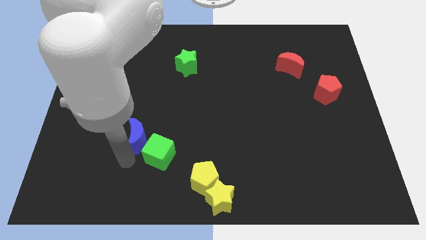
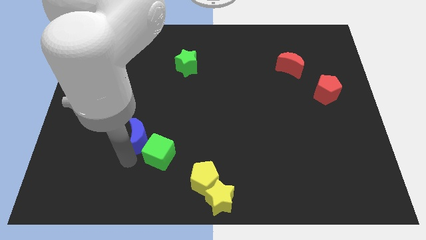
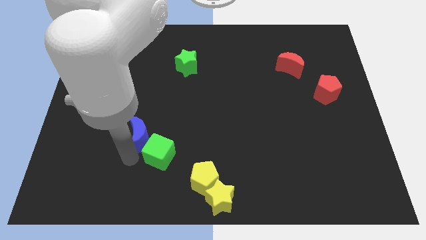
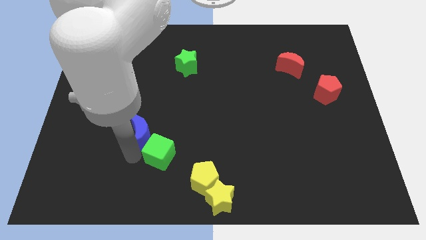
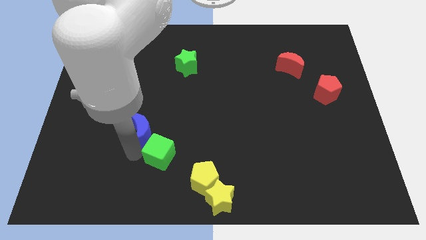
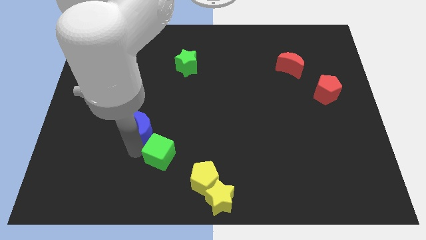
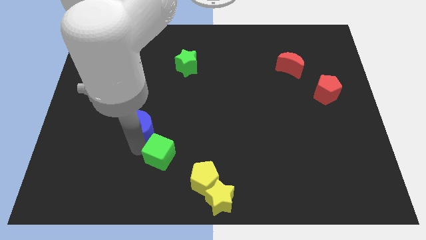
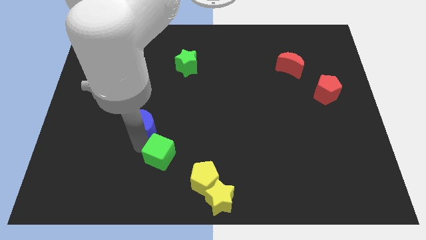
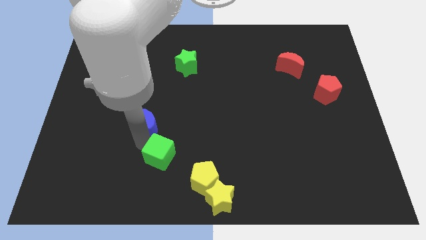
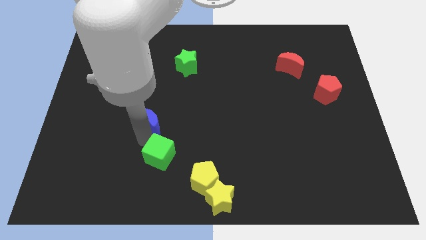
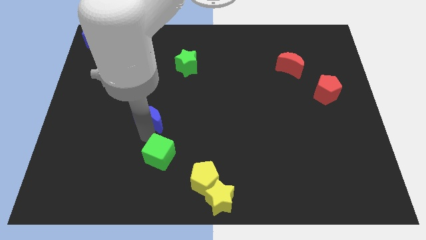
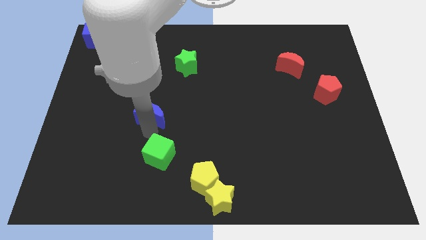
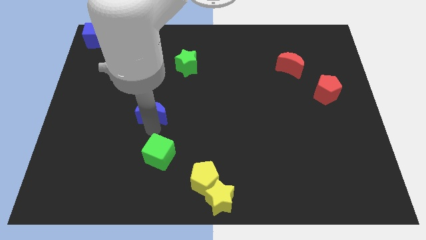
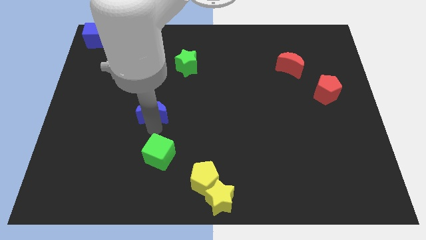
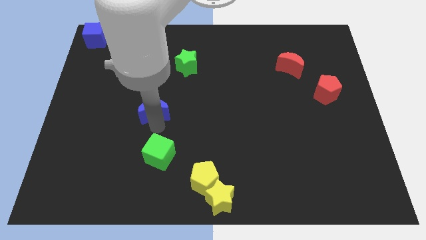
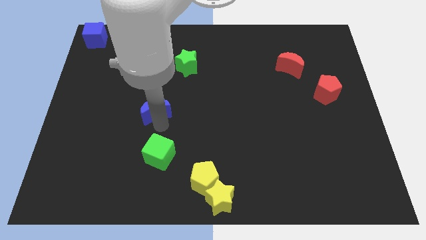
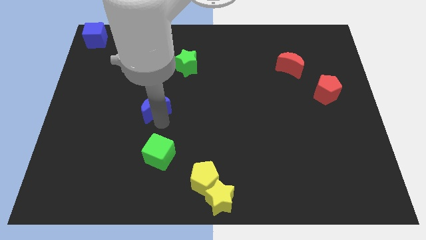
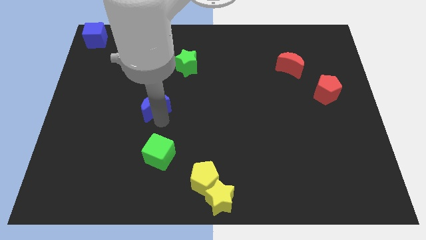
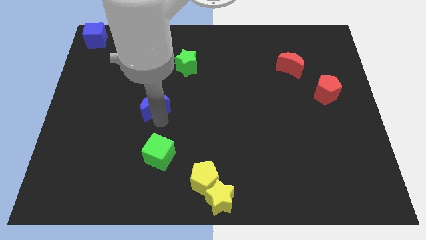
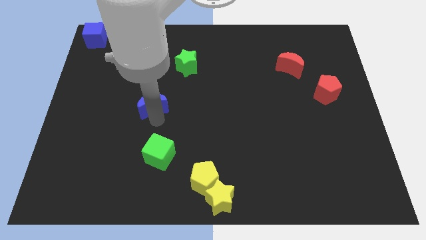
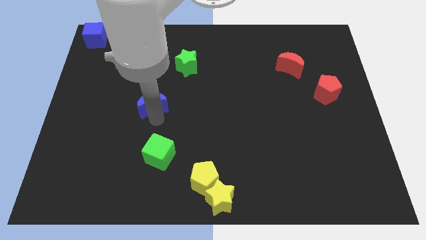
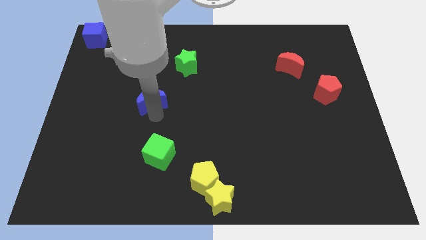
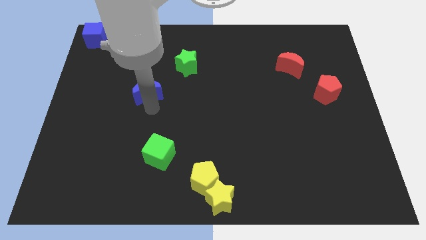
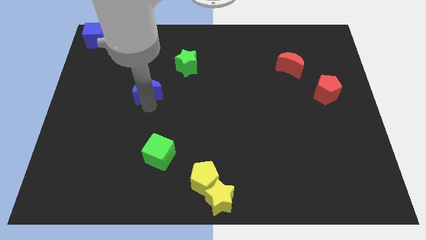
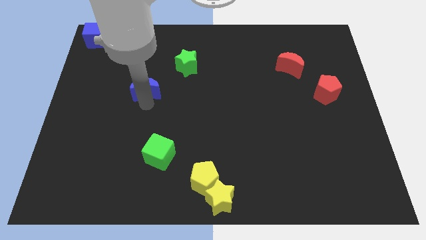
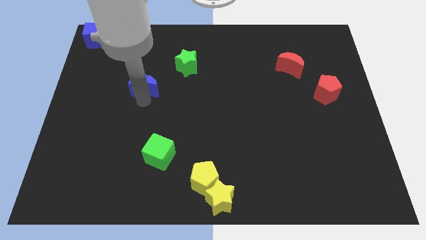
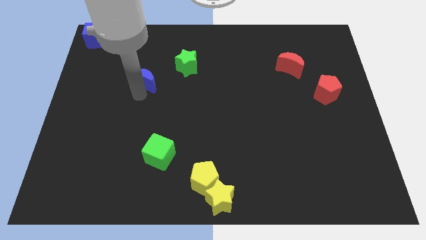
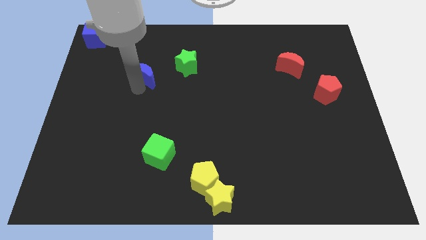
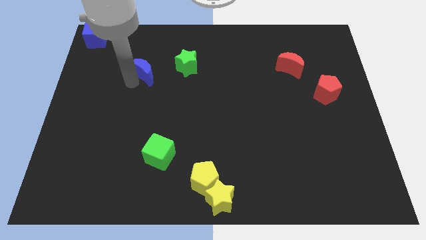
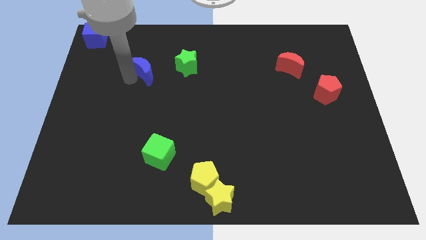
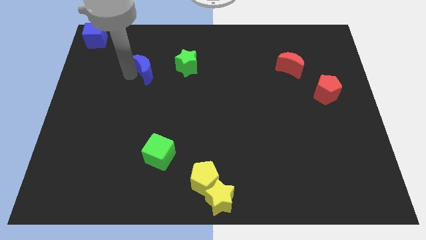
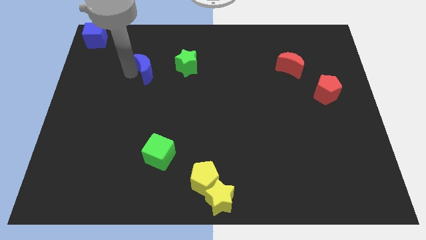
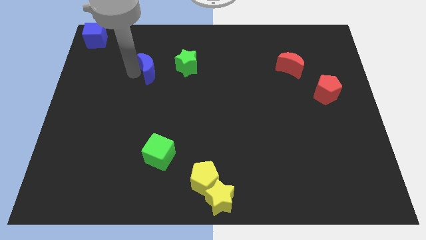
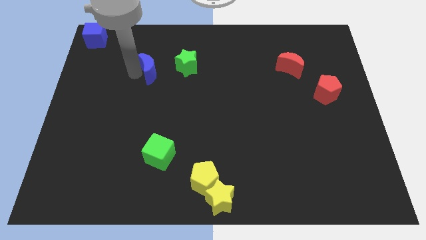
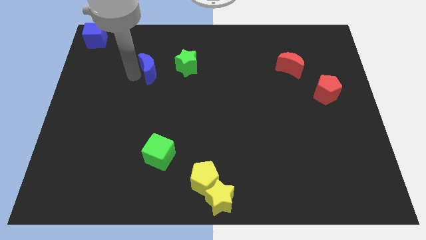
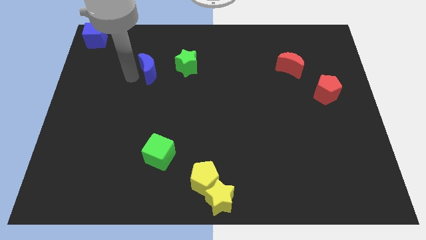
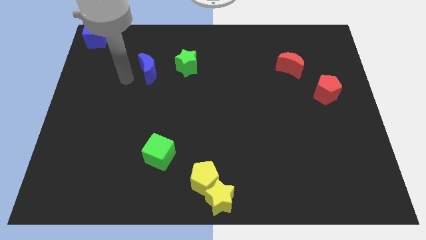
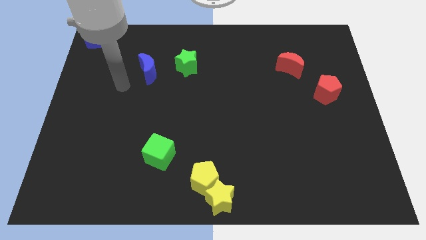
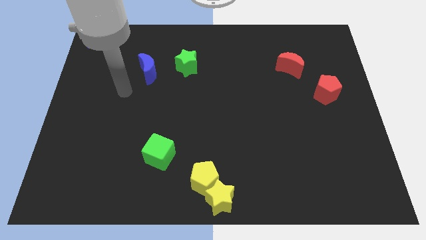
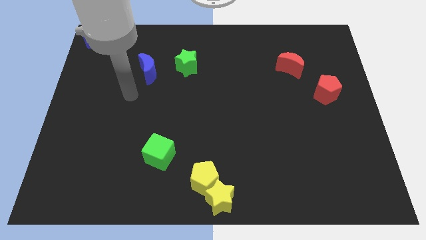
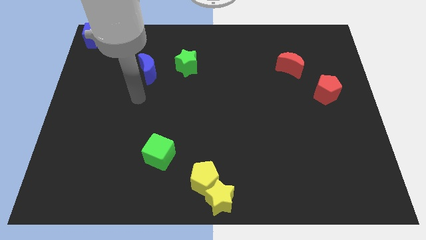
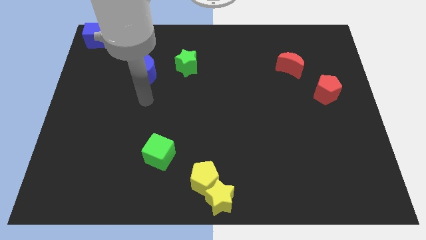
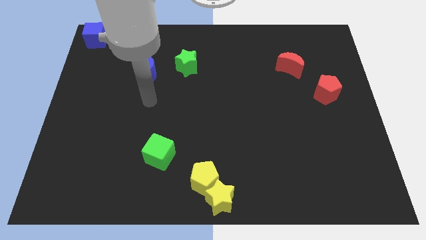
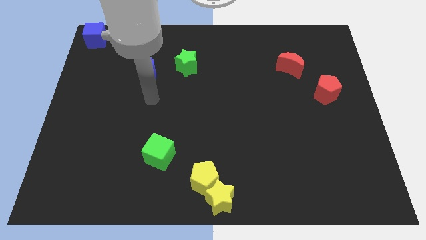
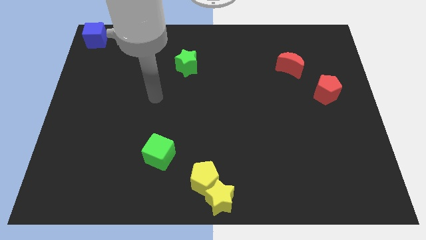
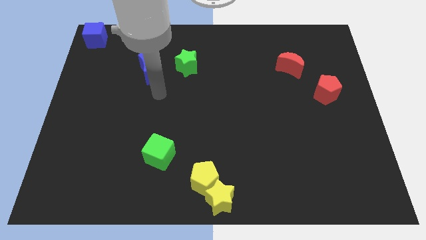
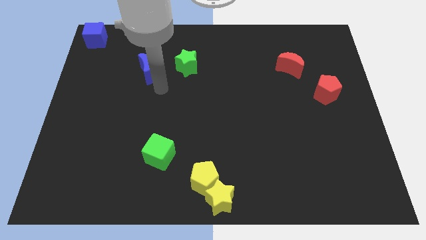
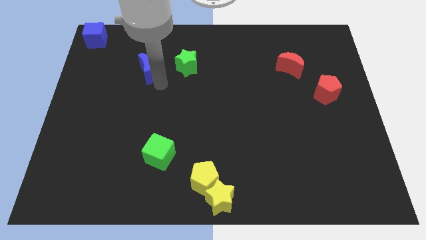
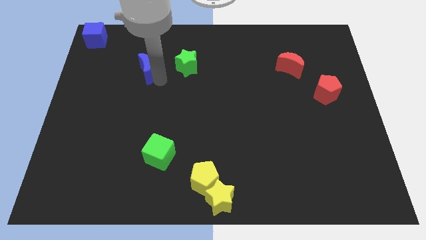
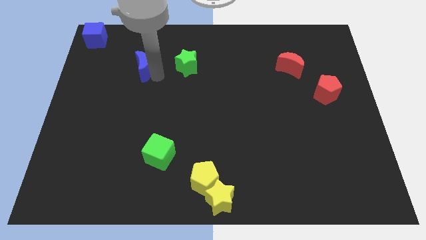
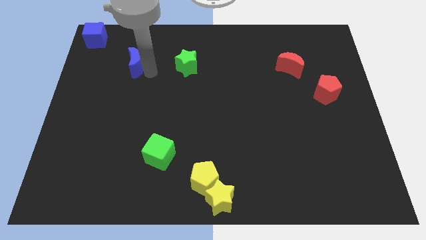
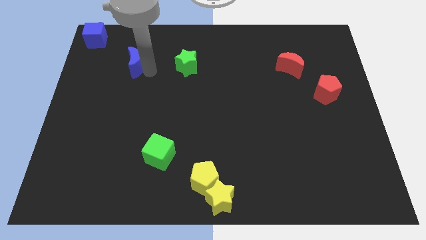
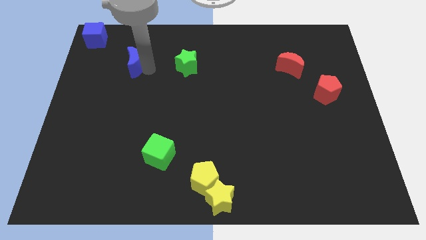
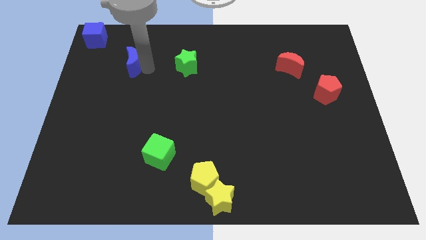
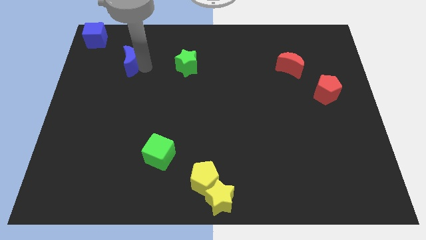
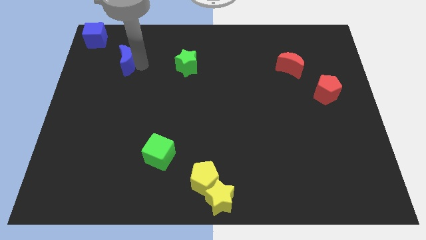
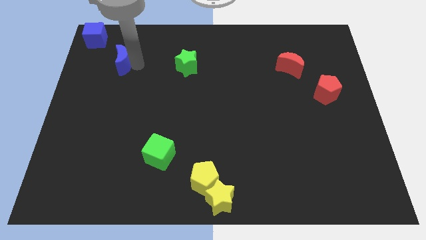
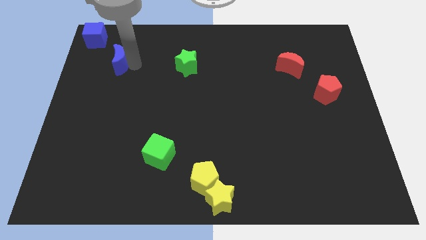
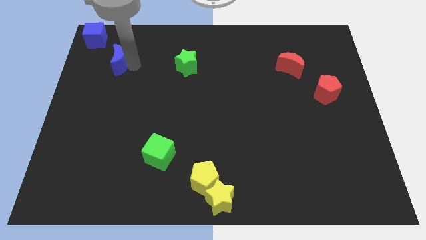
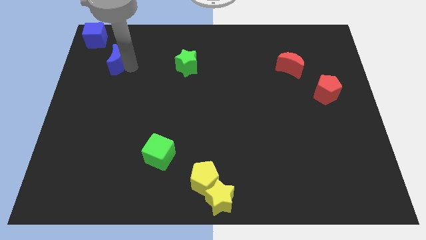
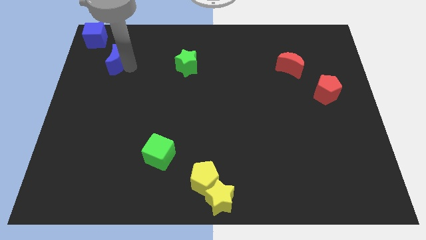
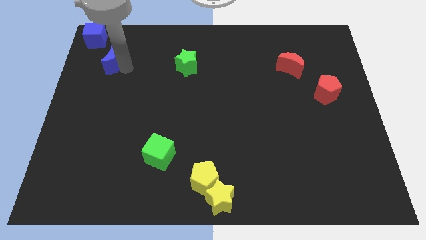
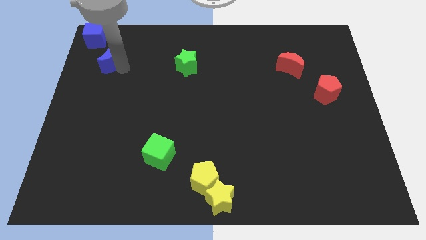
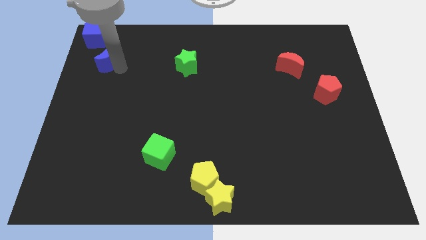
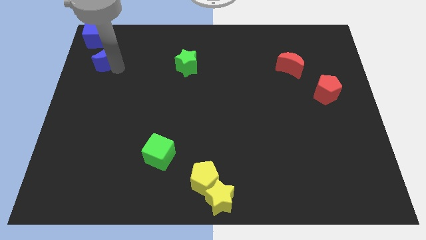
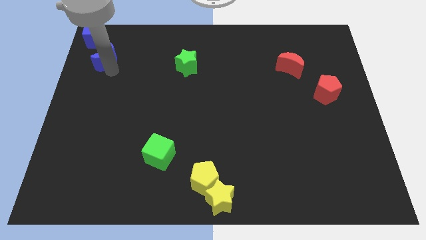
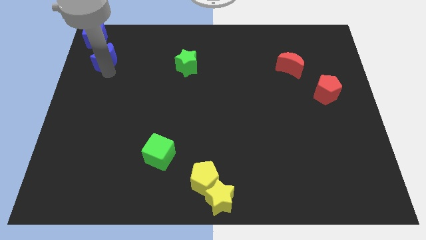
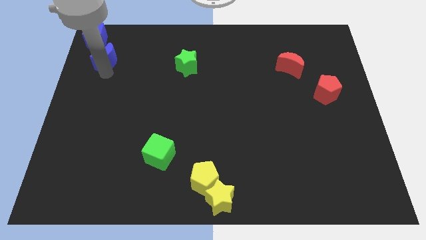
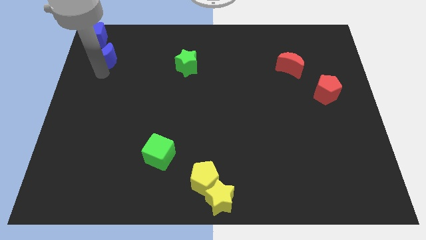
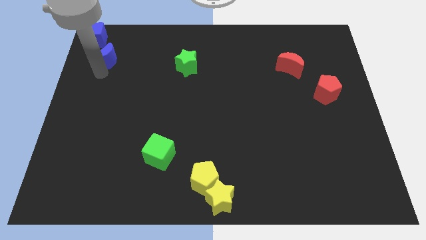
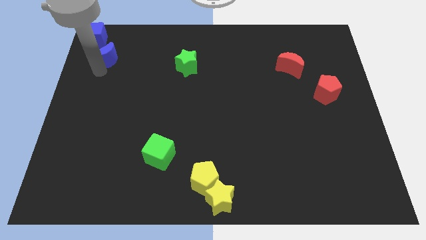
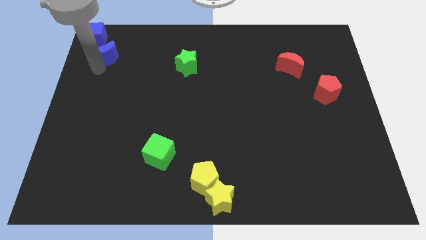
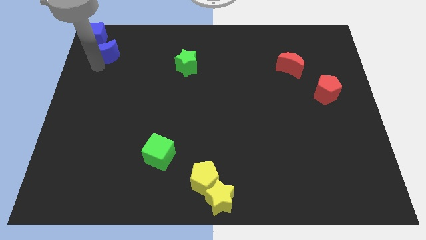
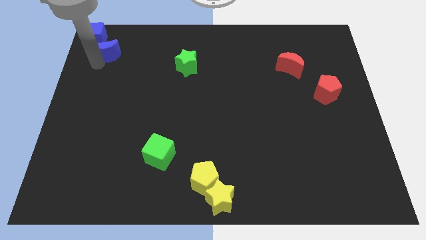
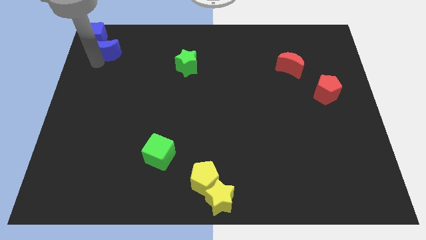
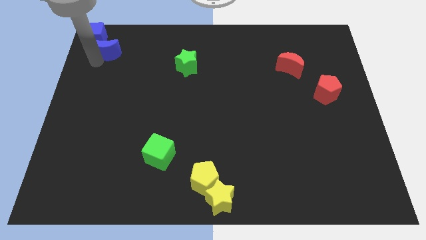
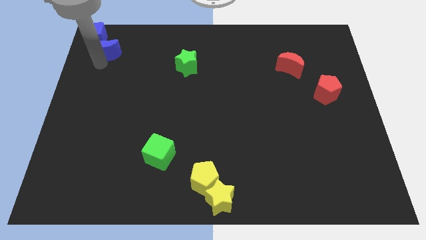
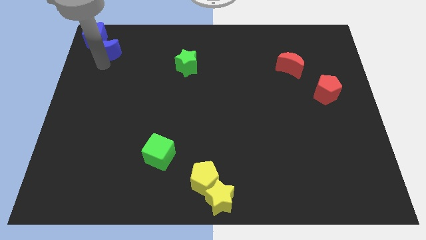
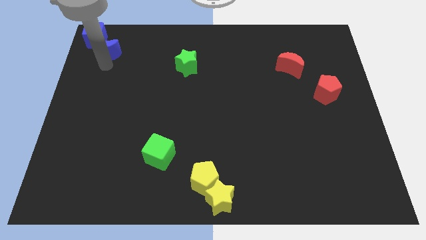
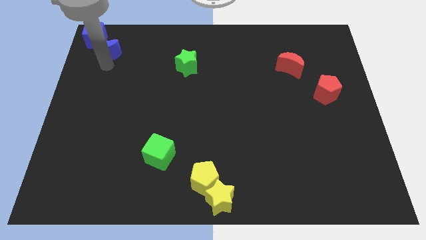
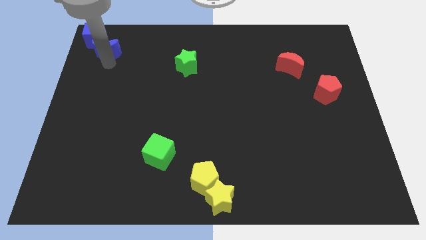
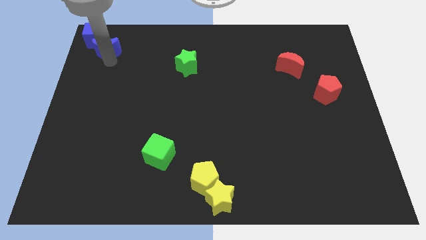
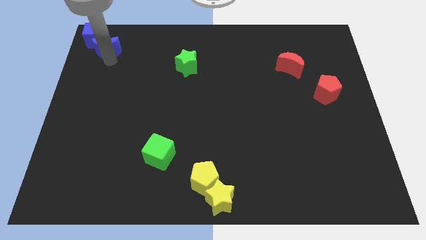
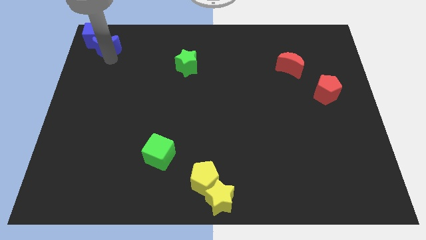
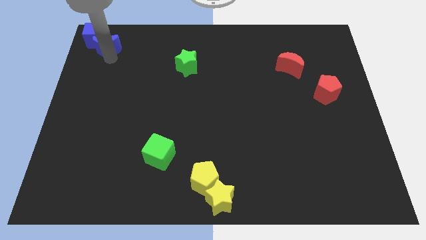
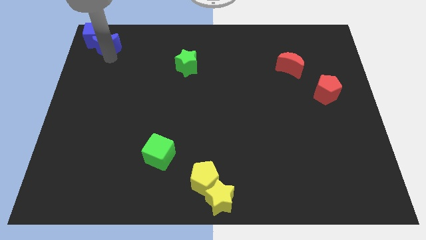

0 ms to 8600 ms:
place the blue crescent below the blue cube

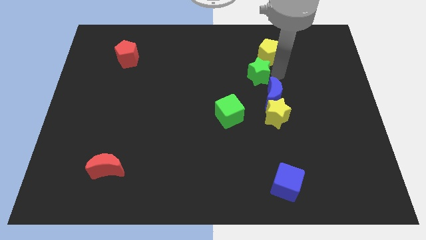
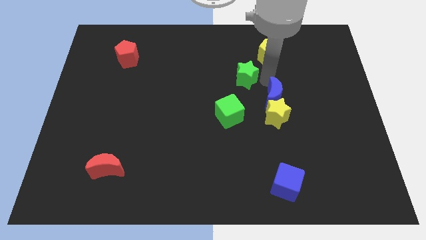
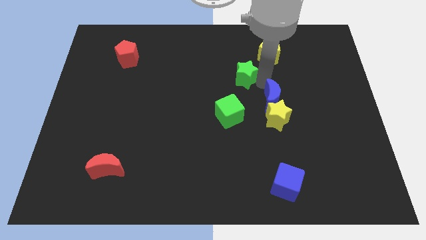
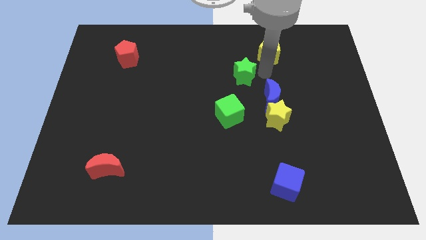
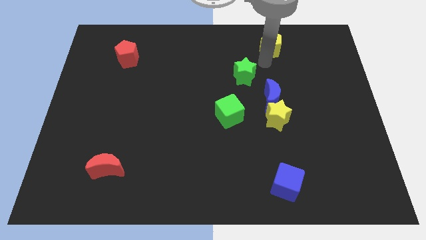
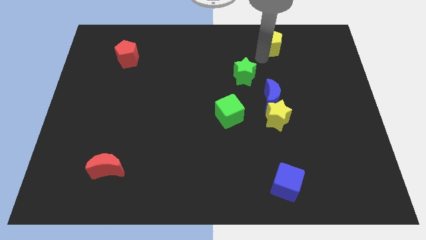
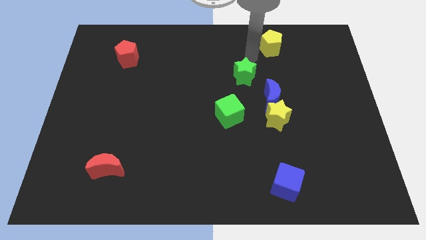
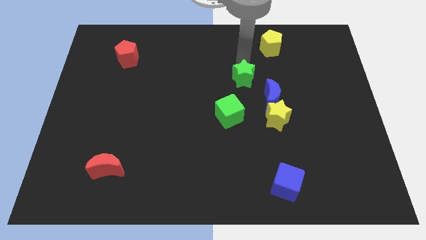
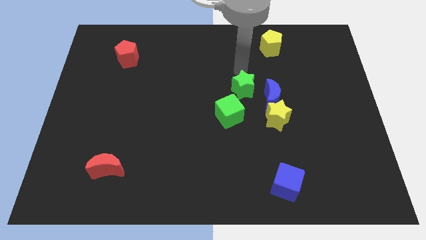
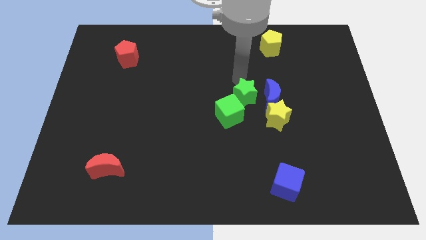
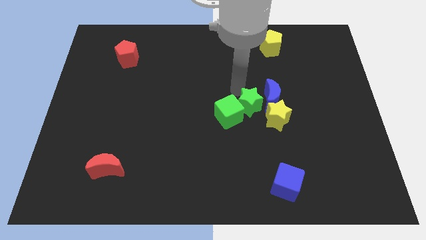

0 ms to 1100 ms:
push green star to right of green cube
